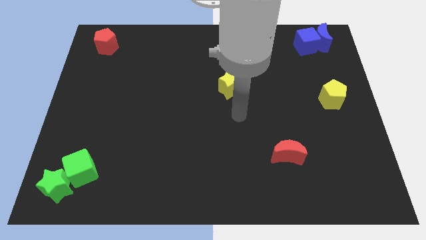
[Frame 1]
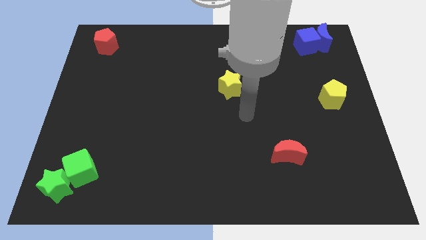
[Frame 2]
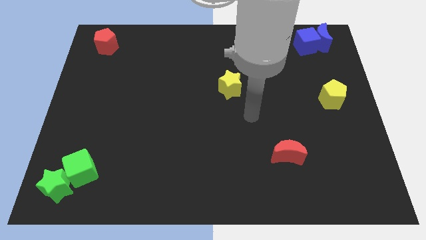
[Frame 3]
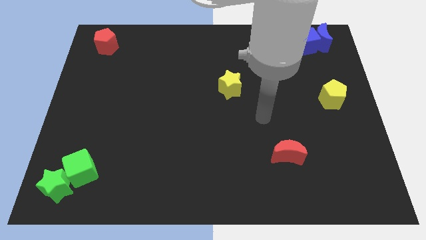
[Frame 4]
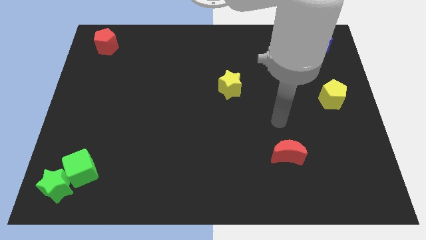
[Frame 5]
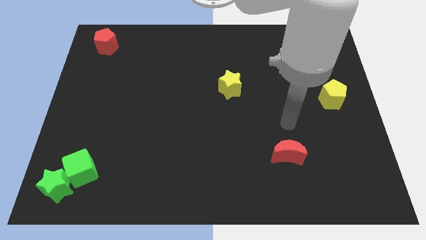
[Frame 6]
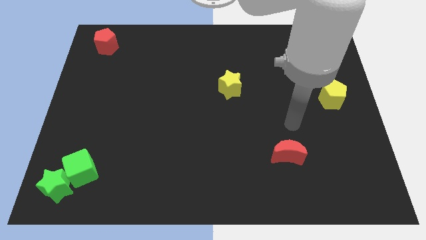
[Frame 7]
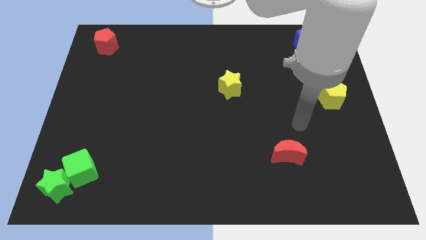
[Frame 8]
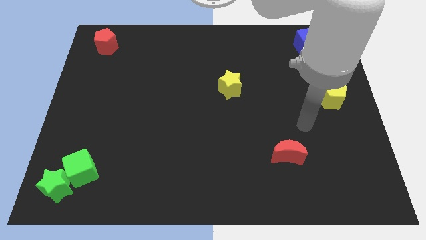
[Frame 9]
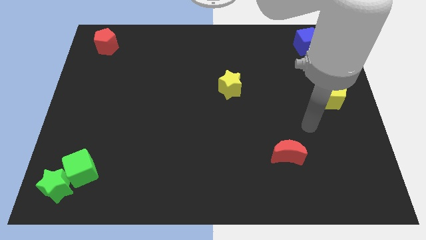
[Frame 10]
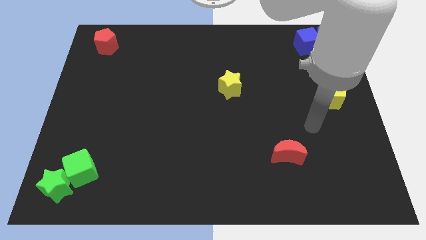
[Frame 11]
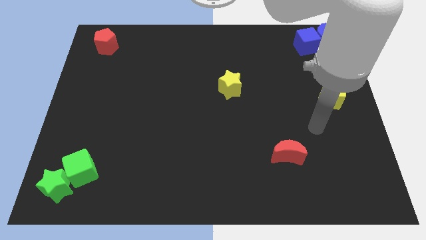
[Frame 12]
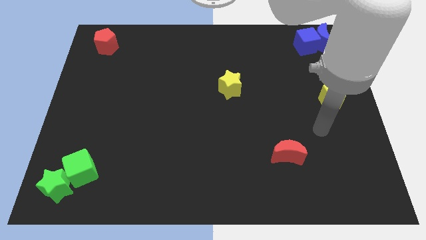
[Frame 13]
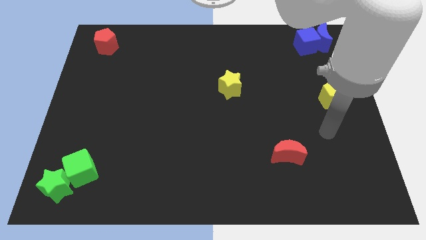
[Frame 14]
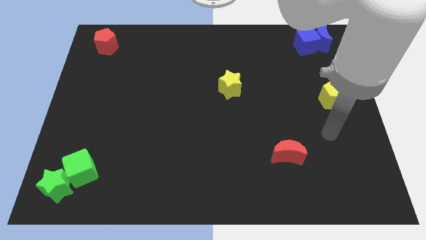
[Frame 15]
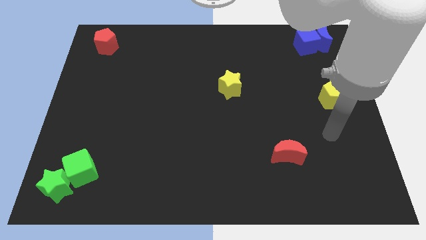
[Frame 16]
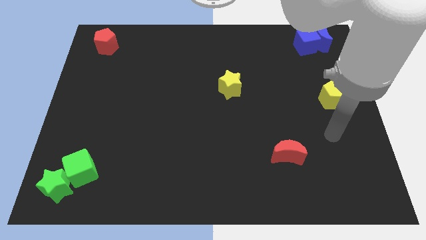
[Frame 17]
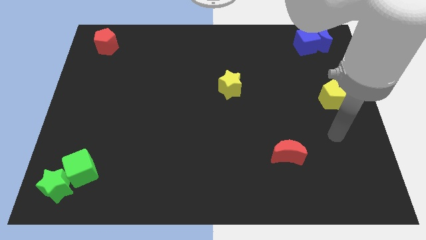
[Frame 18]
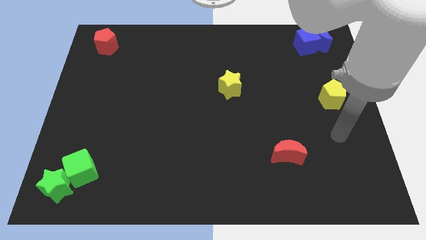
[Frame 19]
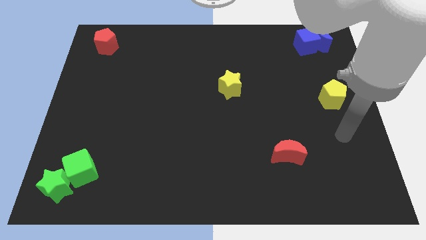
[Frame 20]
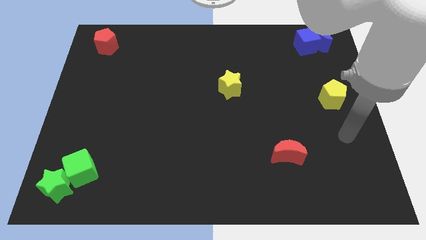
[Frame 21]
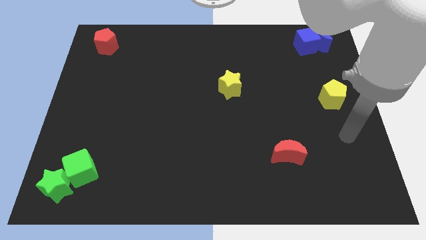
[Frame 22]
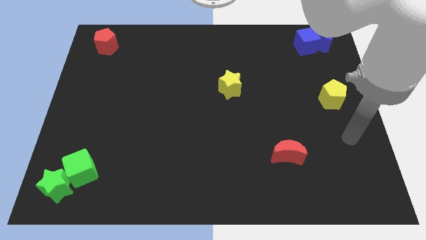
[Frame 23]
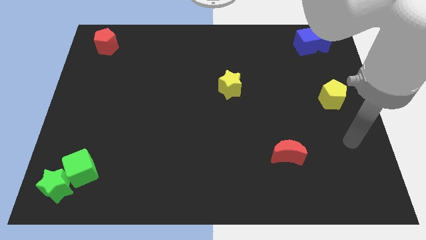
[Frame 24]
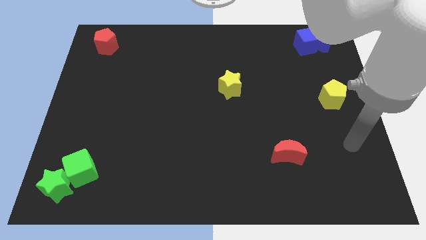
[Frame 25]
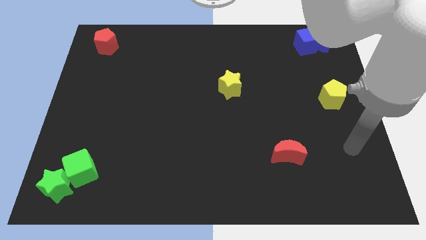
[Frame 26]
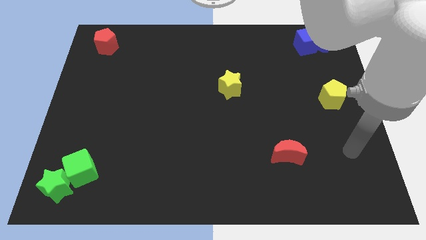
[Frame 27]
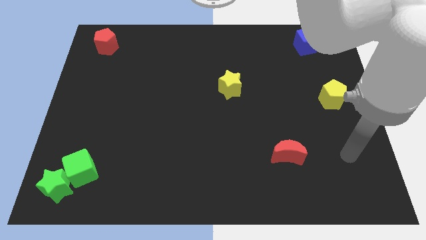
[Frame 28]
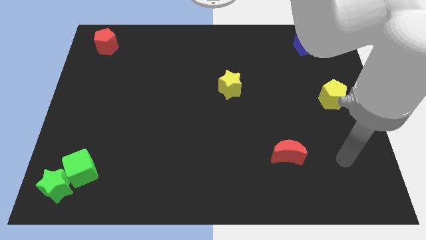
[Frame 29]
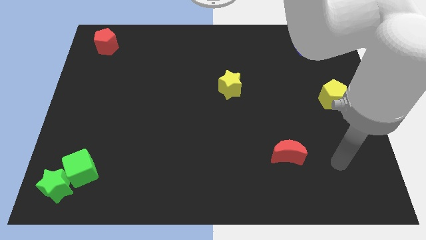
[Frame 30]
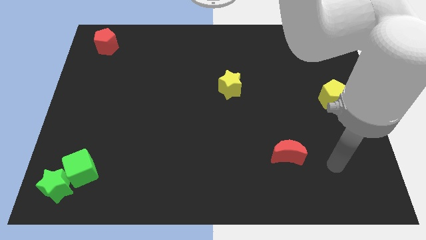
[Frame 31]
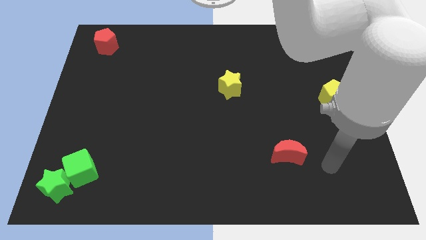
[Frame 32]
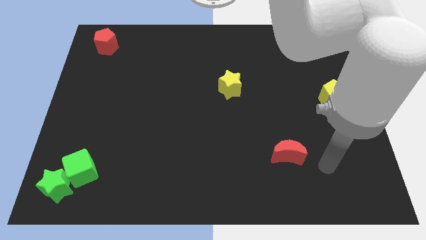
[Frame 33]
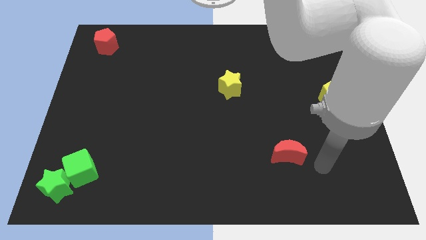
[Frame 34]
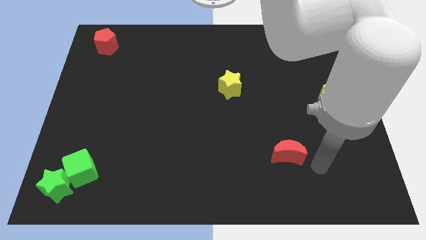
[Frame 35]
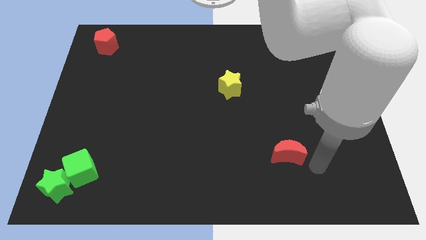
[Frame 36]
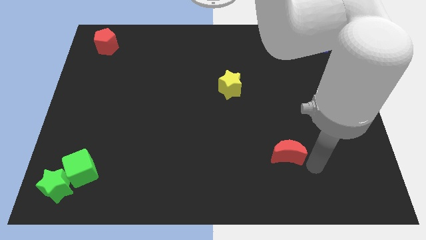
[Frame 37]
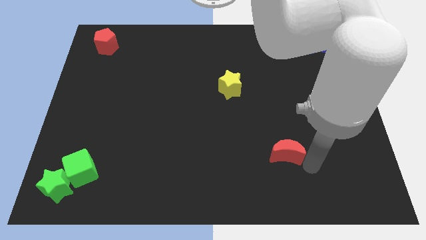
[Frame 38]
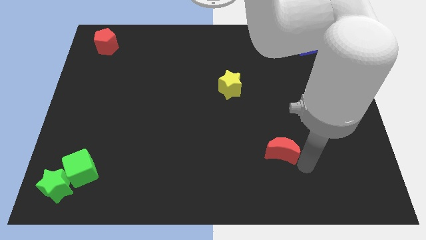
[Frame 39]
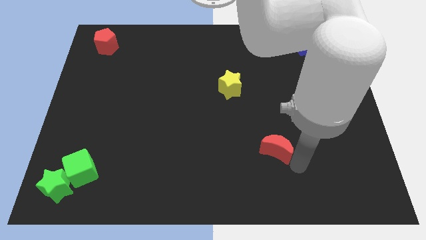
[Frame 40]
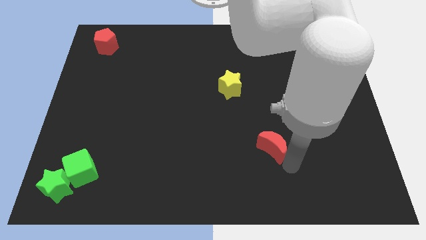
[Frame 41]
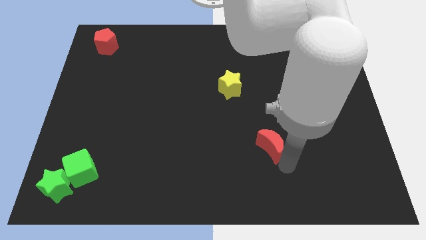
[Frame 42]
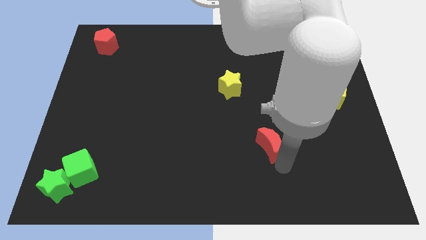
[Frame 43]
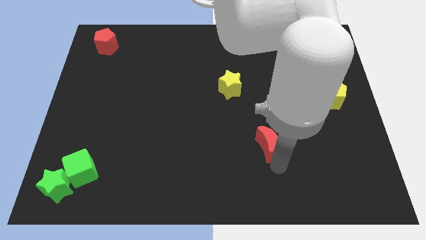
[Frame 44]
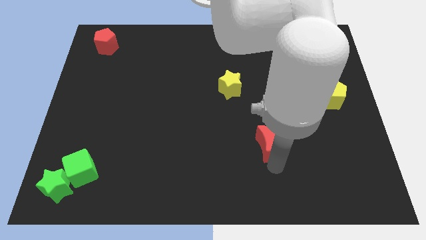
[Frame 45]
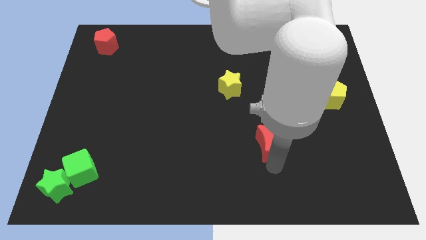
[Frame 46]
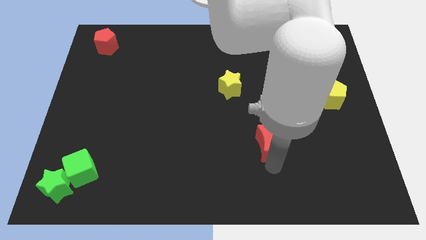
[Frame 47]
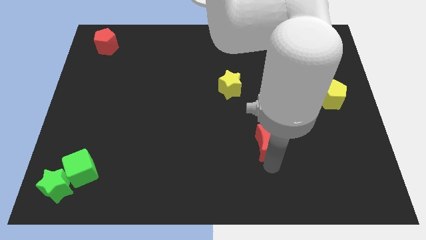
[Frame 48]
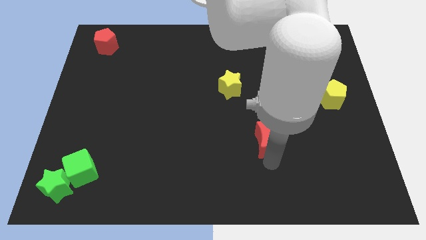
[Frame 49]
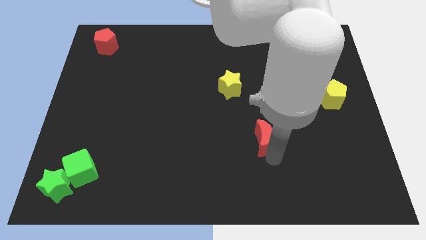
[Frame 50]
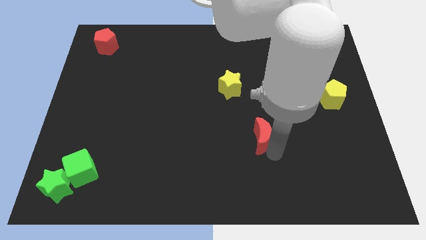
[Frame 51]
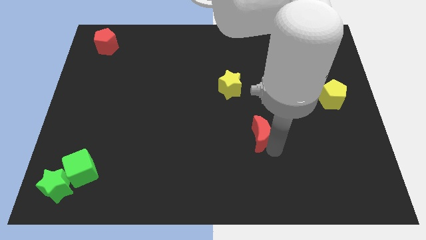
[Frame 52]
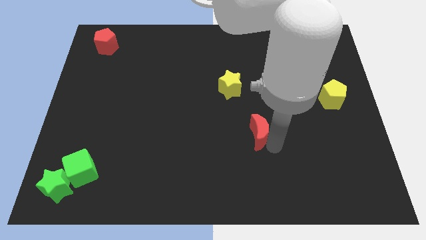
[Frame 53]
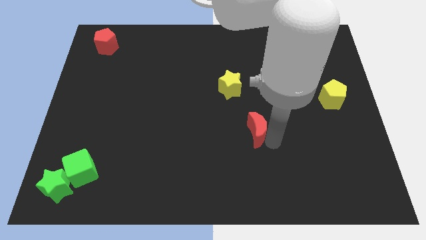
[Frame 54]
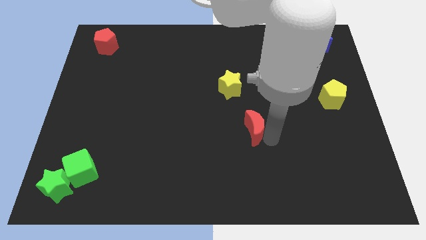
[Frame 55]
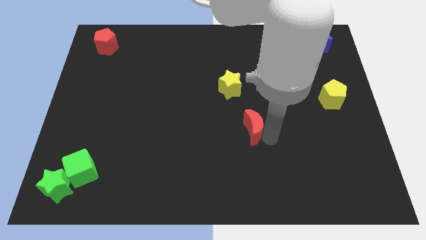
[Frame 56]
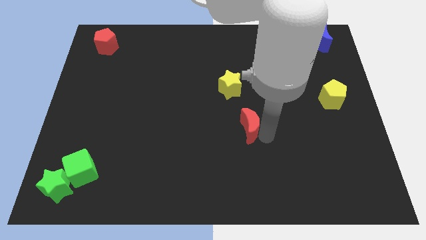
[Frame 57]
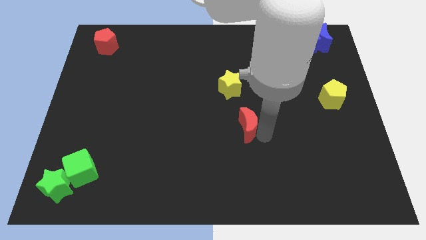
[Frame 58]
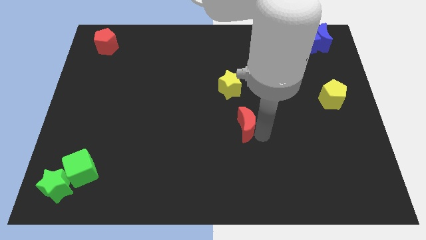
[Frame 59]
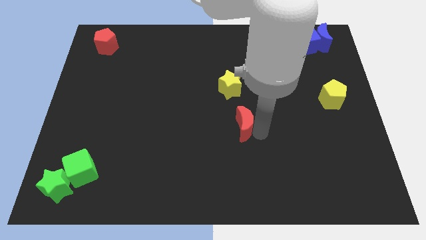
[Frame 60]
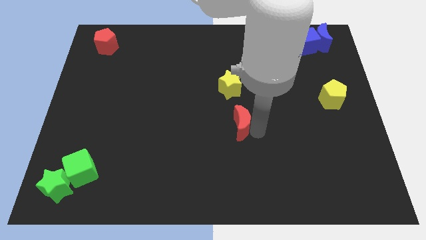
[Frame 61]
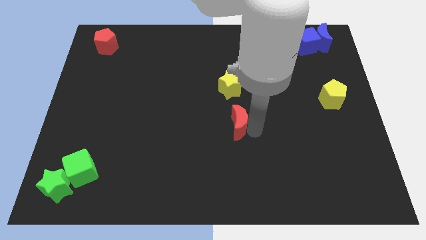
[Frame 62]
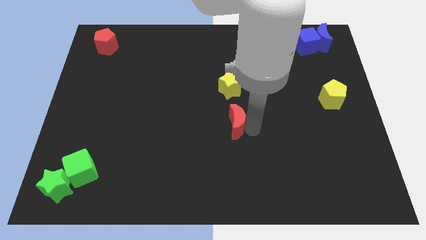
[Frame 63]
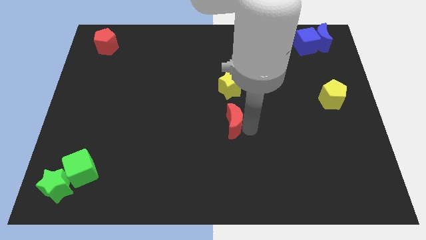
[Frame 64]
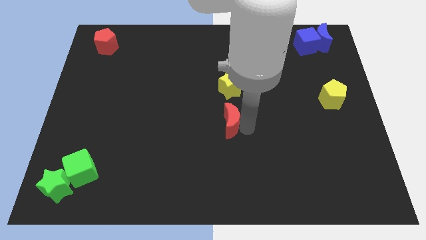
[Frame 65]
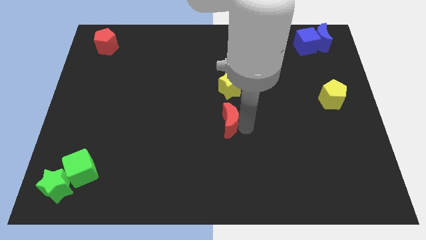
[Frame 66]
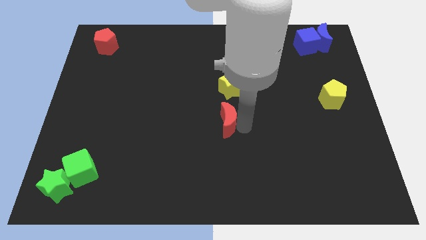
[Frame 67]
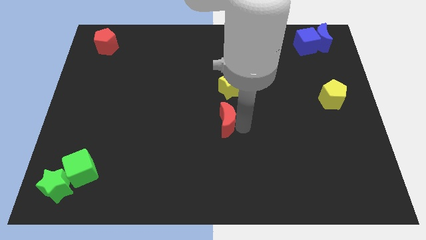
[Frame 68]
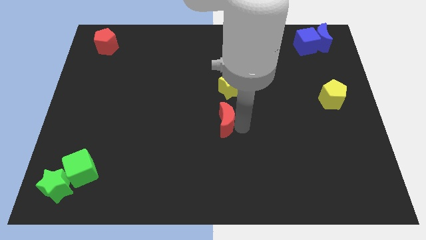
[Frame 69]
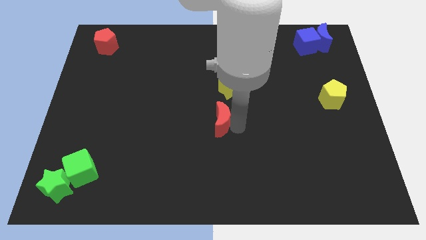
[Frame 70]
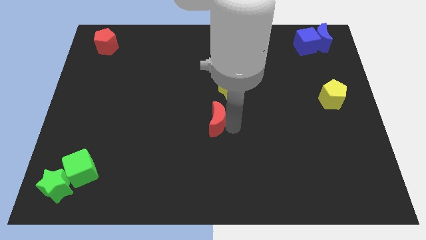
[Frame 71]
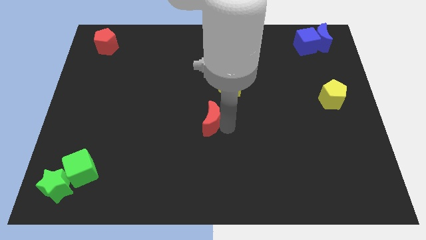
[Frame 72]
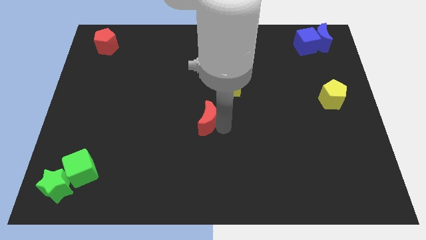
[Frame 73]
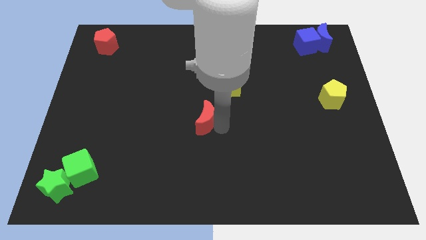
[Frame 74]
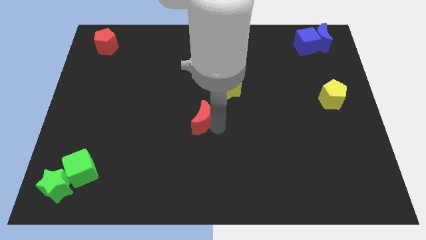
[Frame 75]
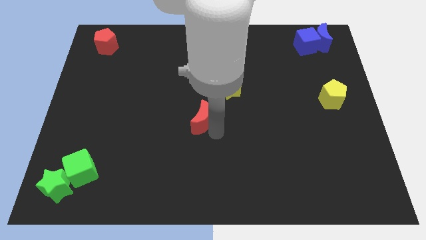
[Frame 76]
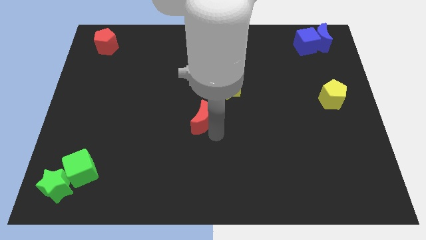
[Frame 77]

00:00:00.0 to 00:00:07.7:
move the red crescent to the center of the board

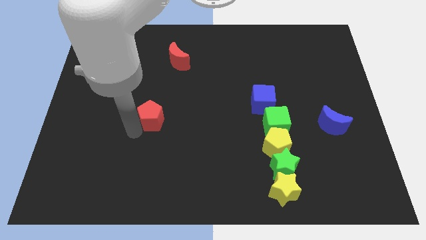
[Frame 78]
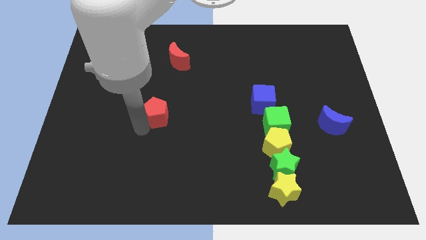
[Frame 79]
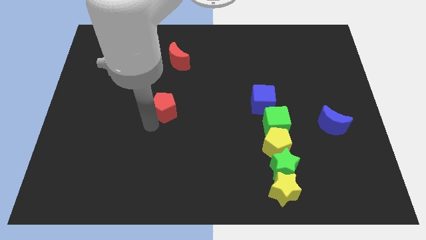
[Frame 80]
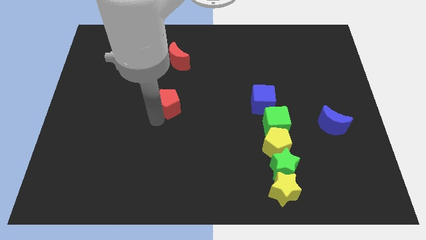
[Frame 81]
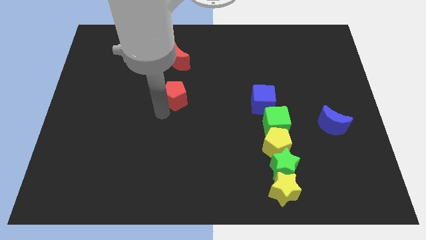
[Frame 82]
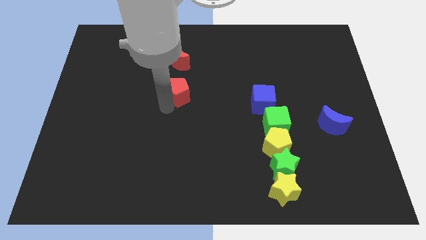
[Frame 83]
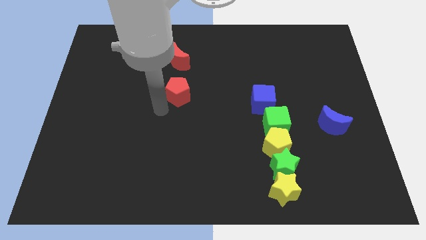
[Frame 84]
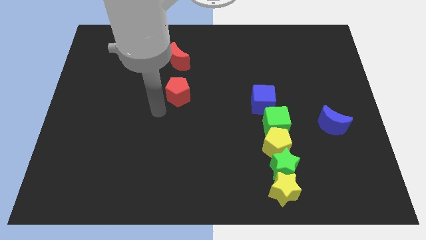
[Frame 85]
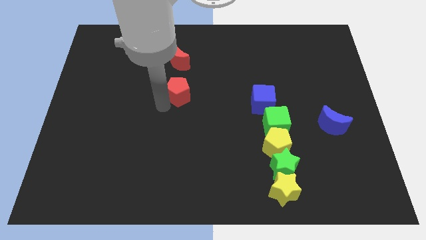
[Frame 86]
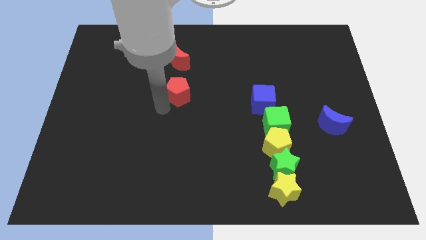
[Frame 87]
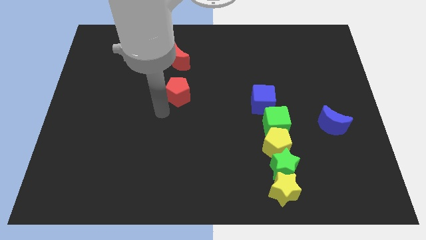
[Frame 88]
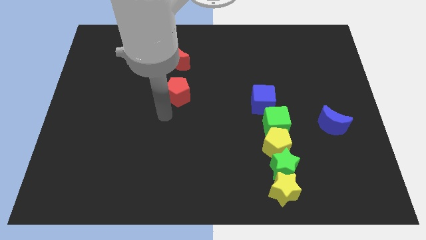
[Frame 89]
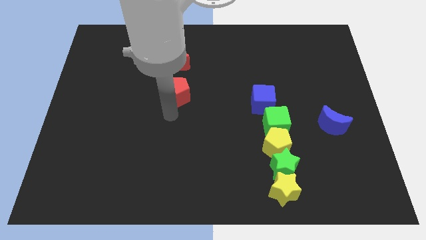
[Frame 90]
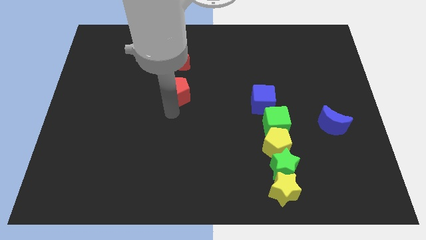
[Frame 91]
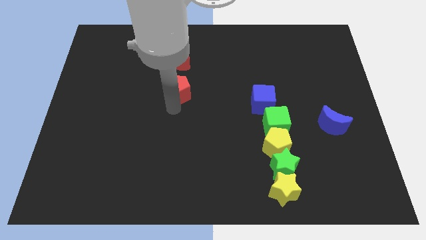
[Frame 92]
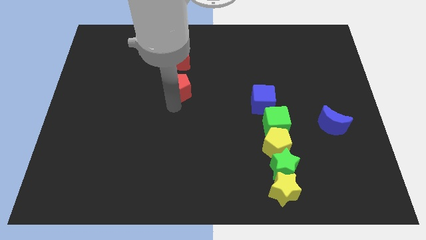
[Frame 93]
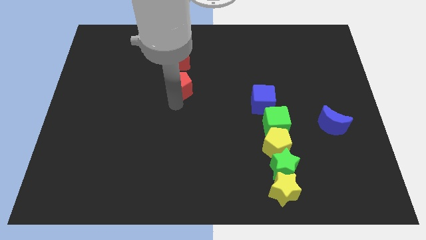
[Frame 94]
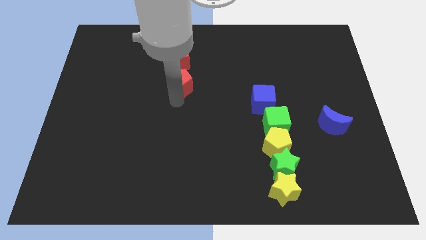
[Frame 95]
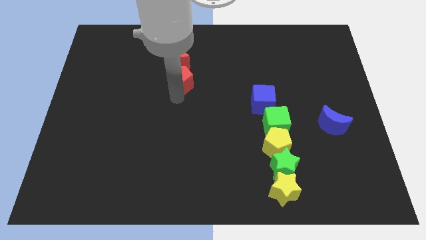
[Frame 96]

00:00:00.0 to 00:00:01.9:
place red pentagon to the bottom of red moon
